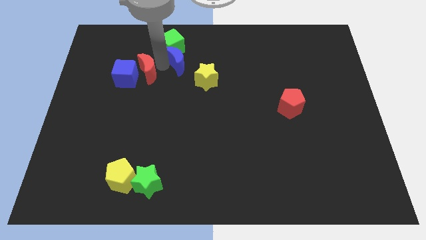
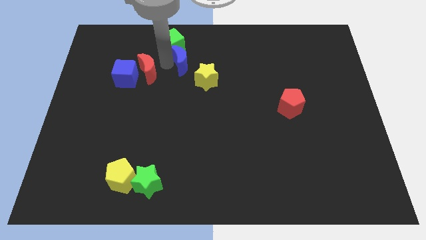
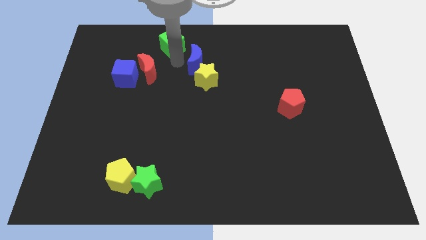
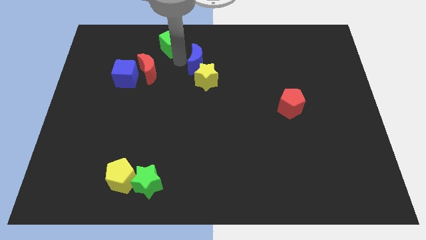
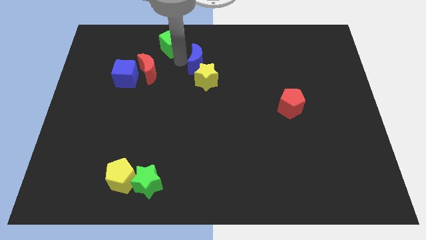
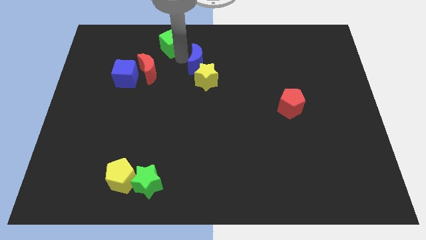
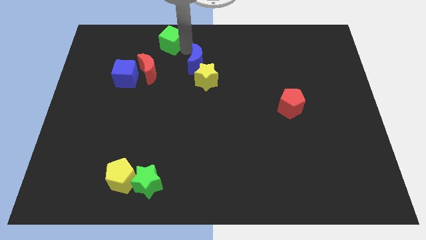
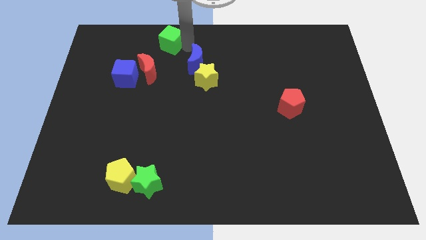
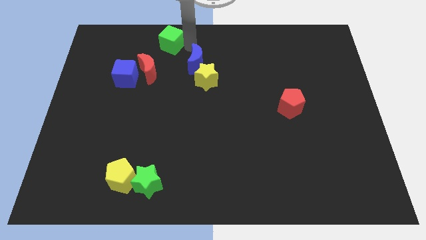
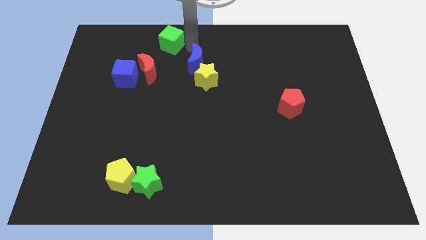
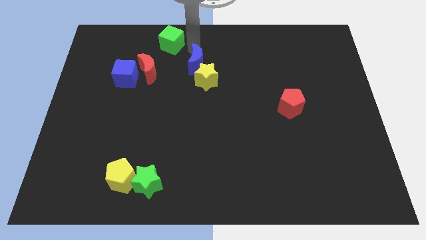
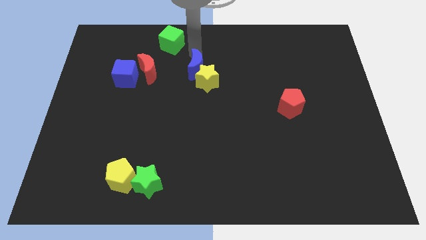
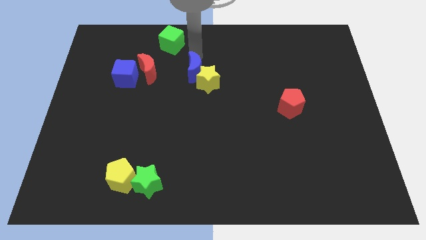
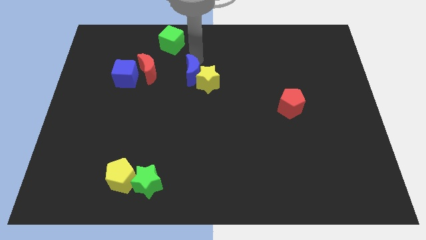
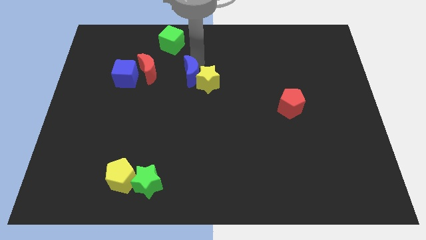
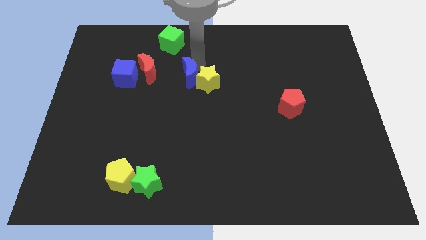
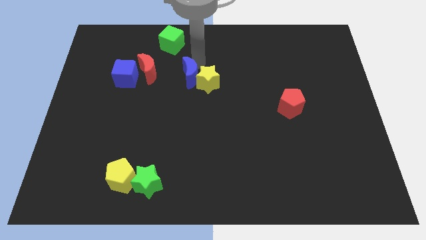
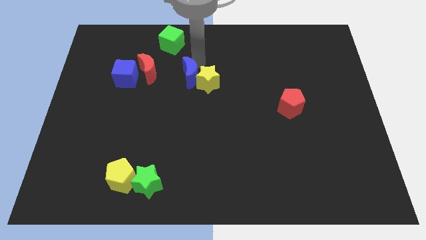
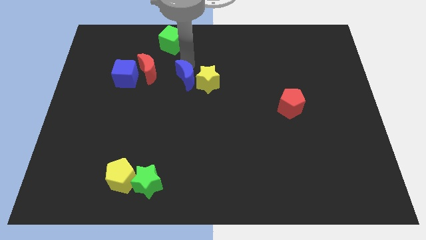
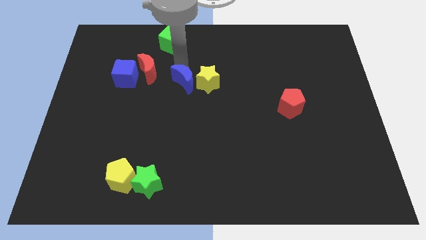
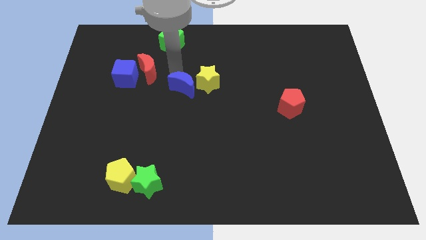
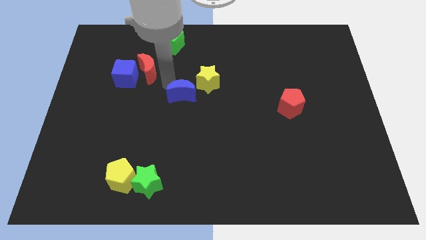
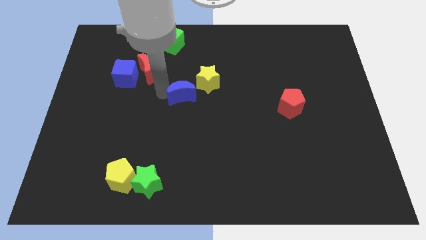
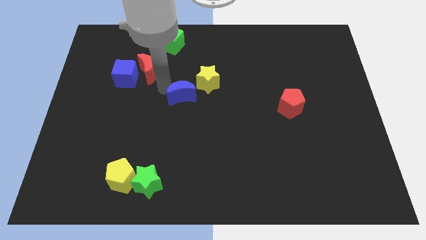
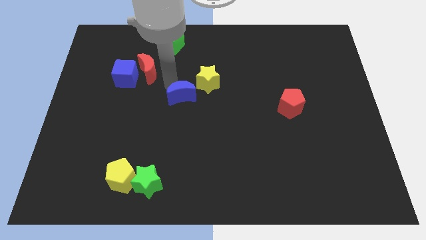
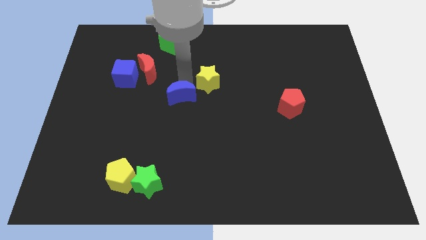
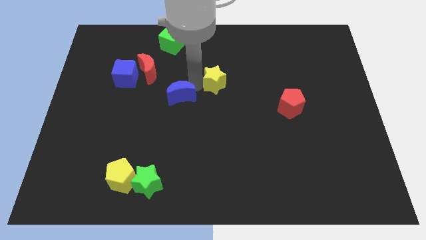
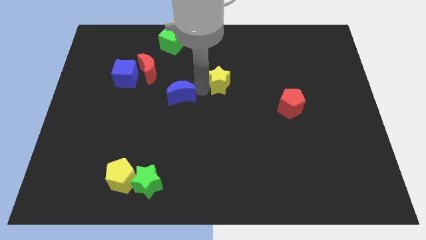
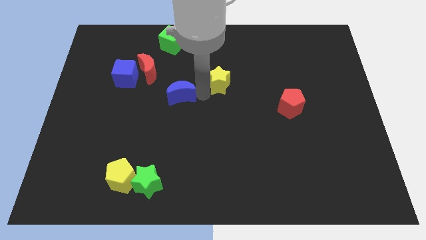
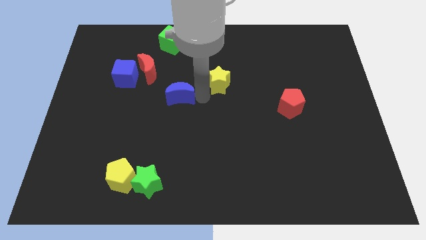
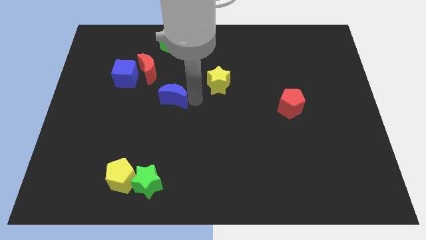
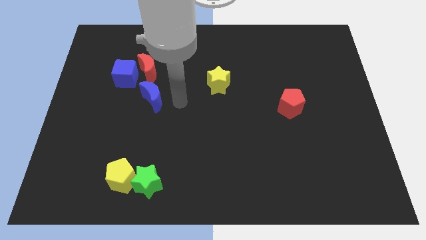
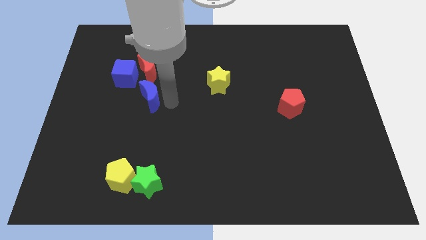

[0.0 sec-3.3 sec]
push blue crescent below red crescent

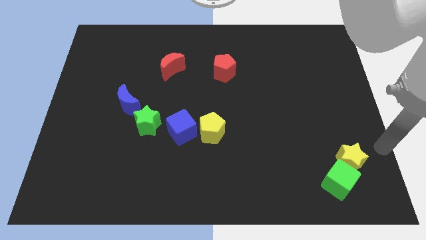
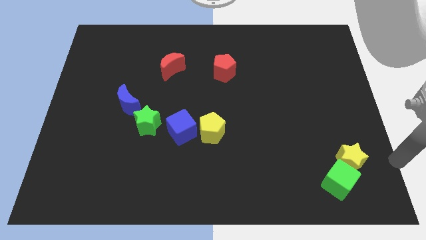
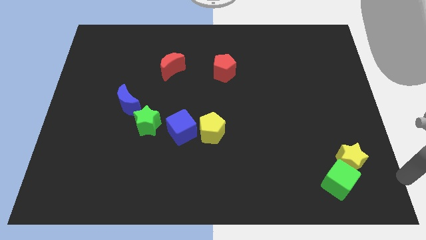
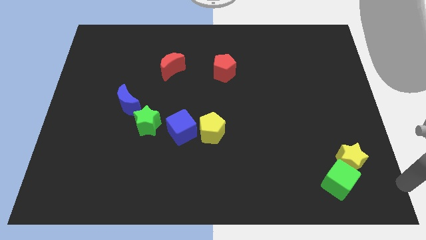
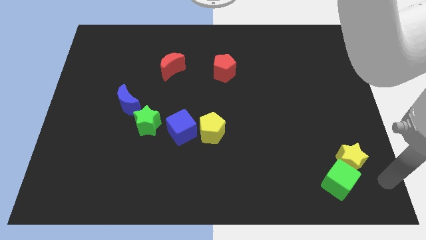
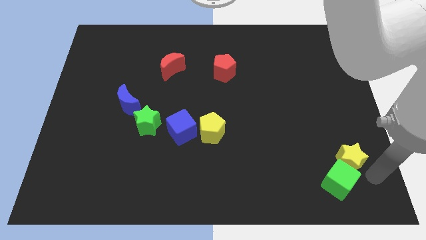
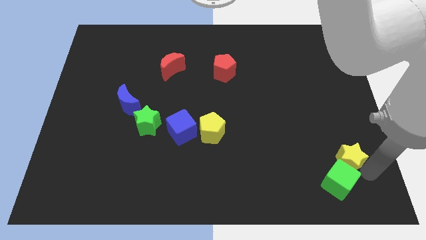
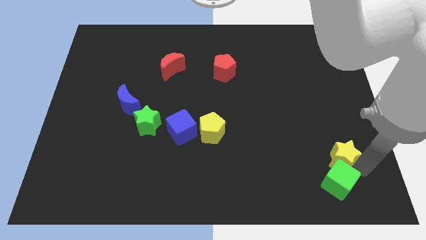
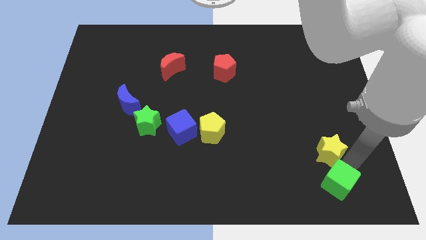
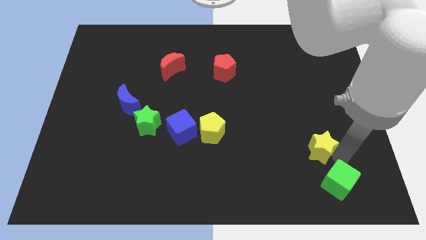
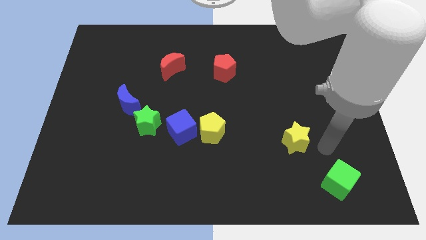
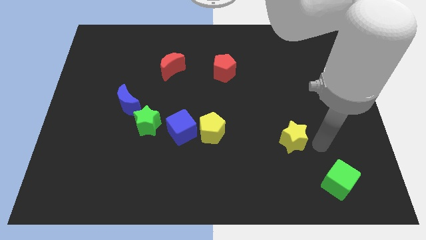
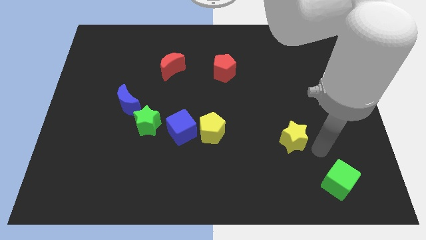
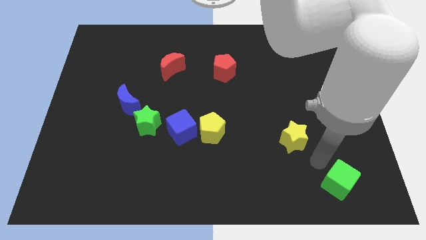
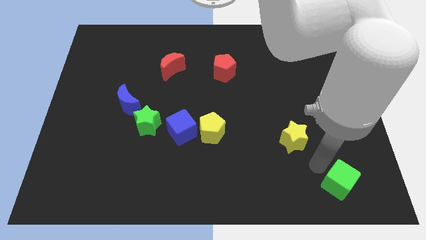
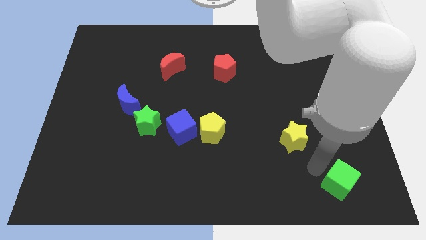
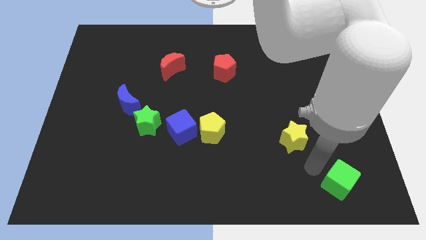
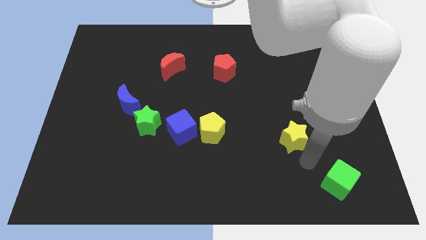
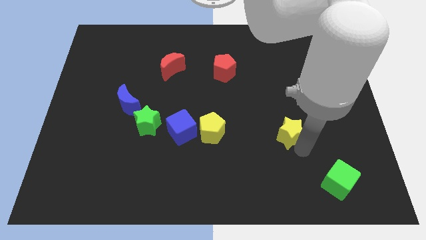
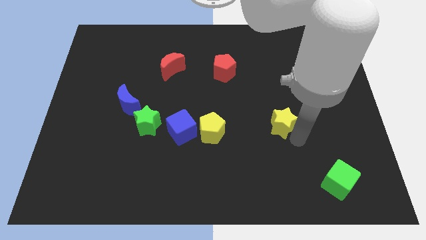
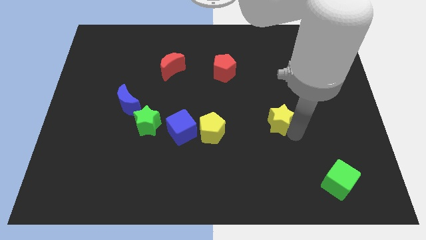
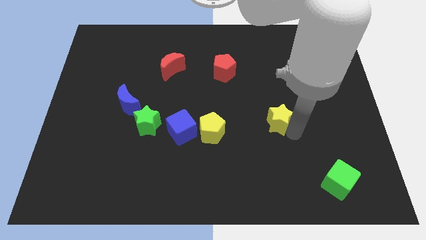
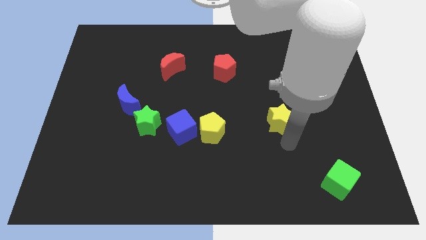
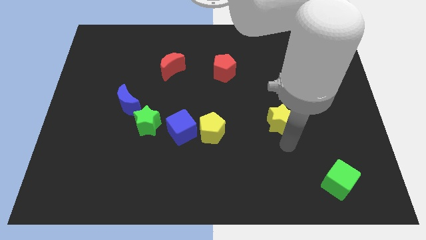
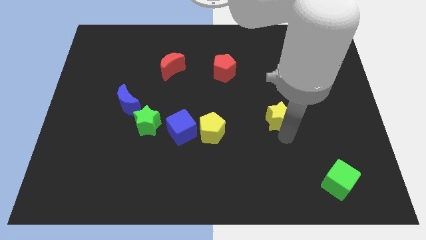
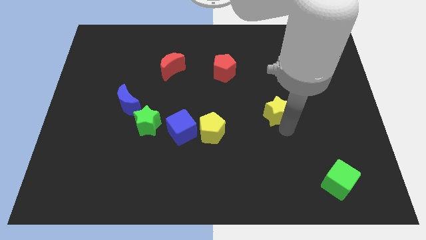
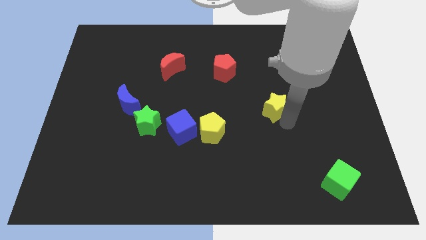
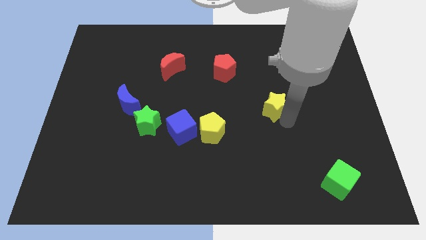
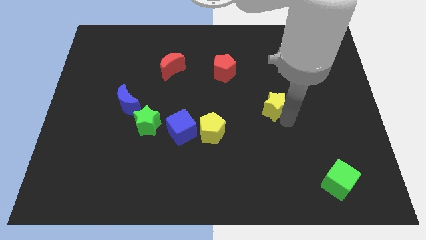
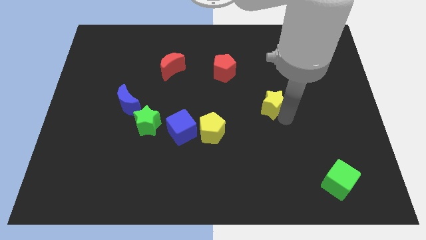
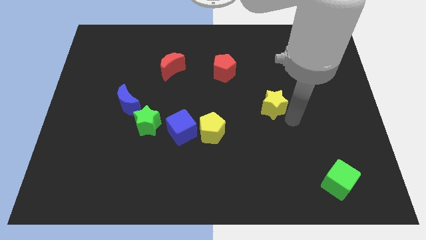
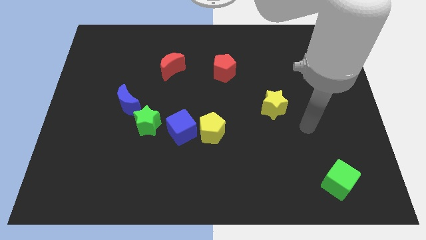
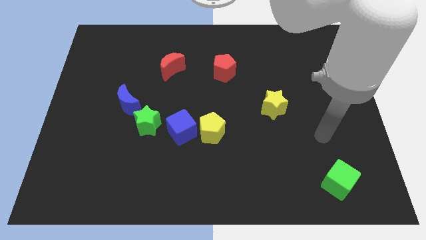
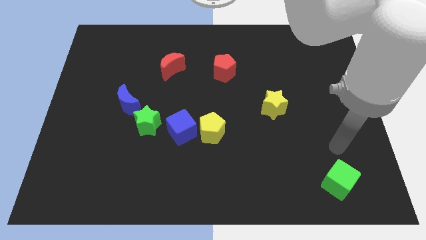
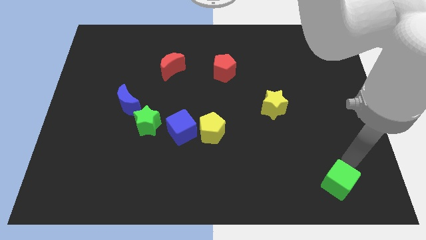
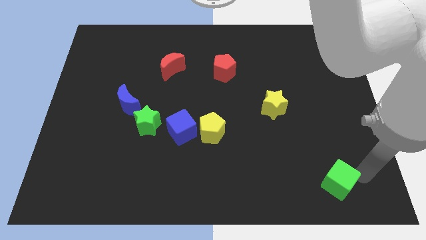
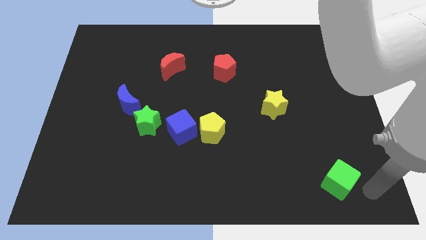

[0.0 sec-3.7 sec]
push the yellow star diagonally to the yellow pentagon

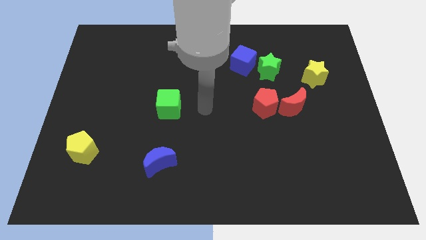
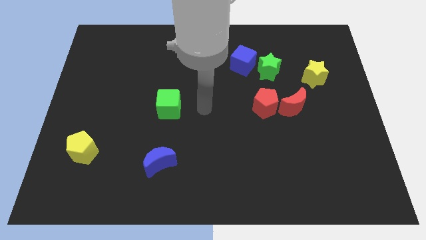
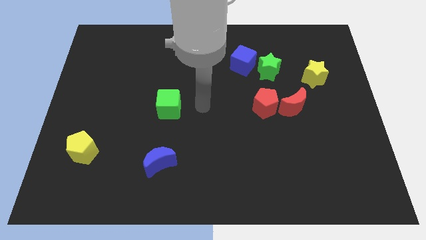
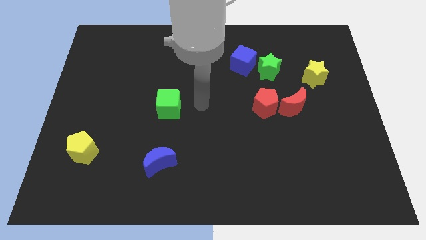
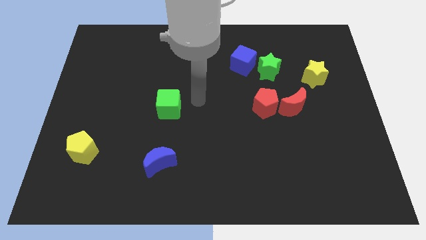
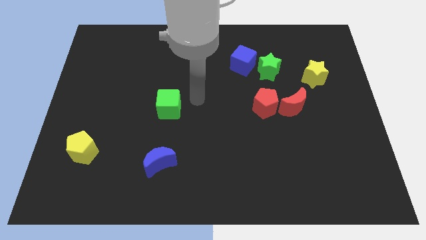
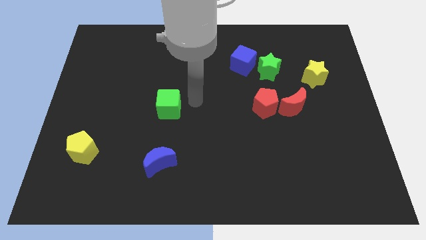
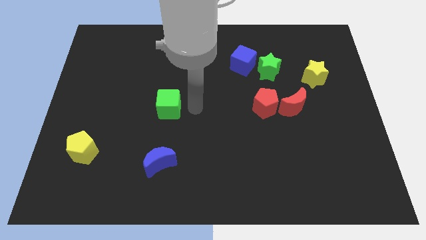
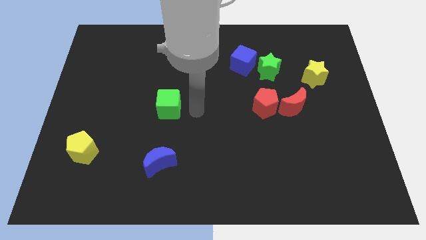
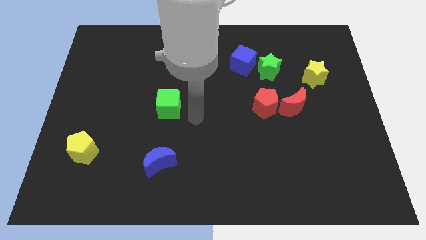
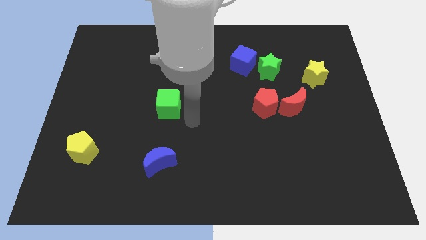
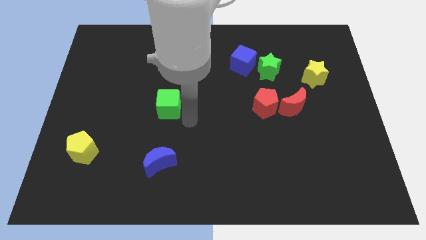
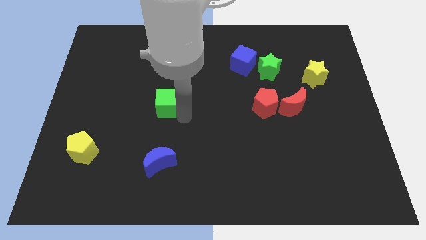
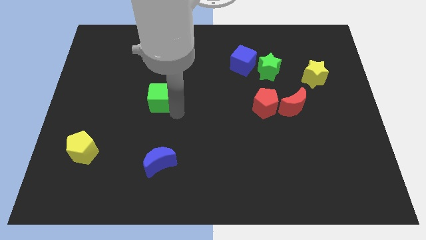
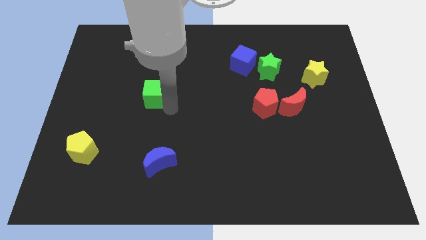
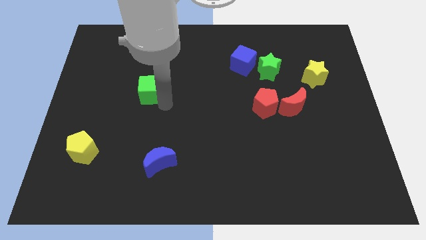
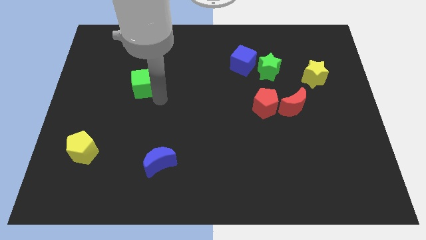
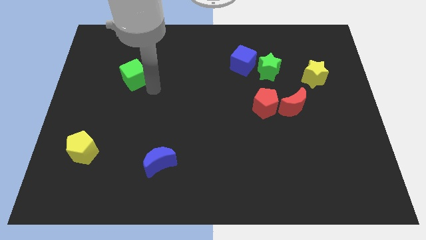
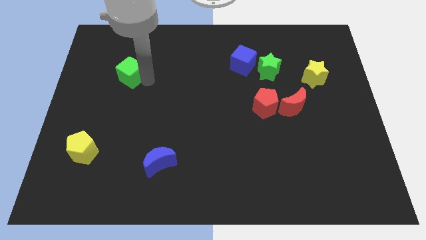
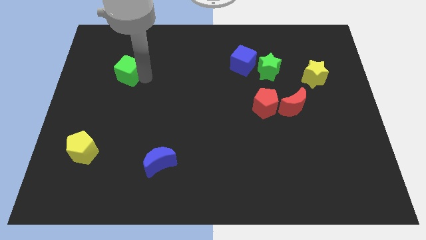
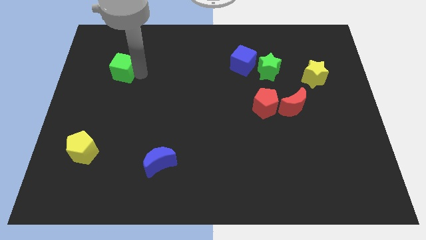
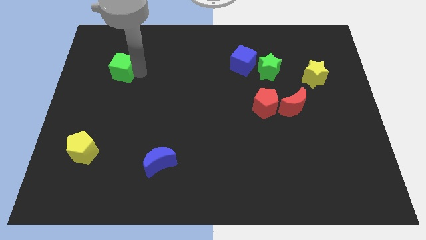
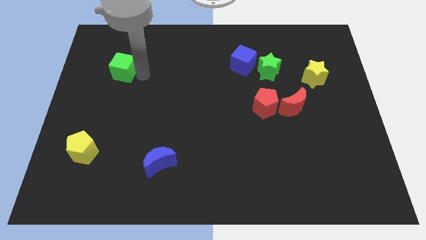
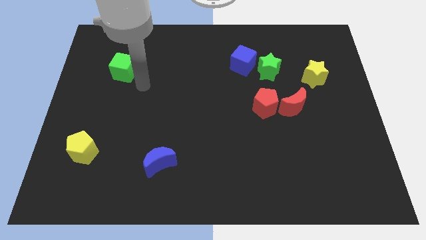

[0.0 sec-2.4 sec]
push the green cube towards the top left of the board
